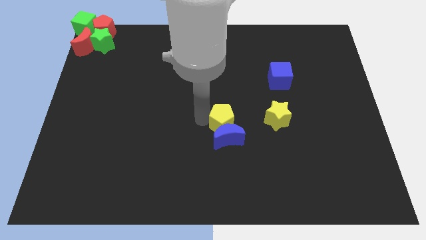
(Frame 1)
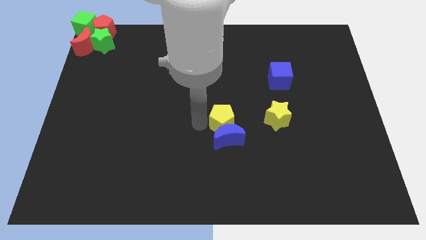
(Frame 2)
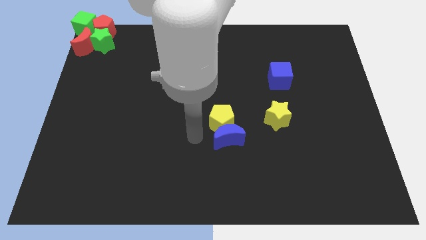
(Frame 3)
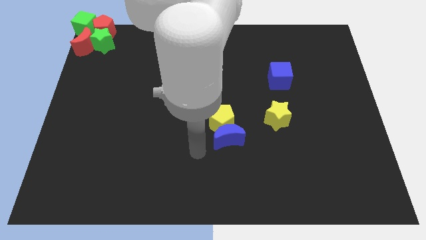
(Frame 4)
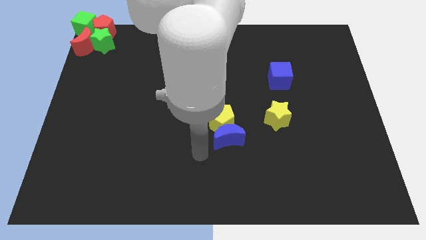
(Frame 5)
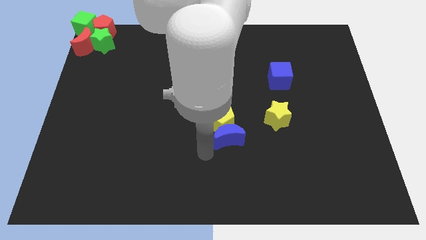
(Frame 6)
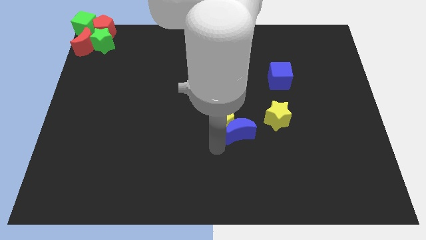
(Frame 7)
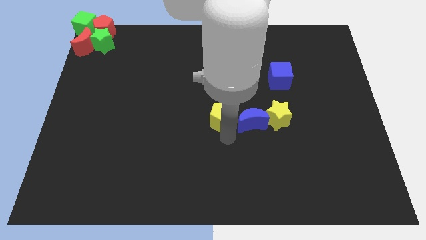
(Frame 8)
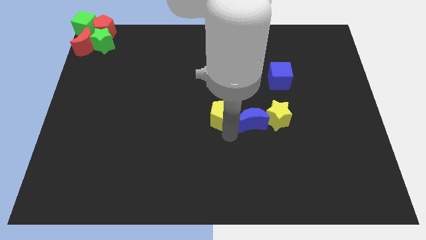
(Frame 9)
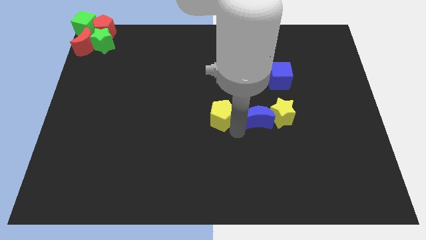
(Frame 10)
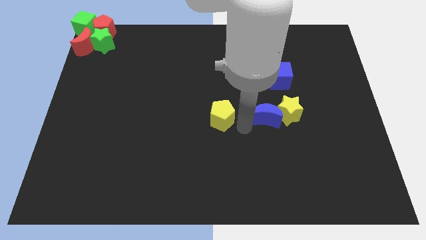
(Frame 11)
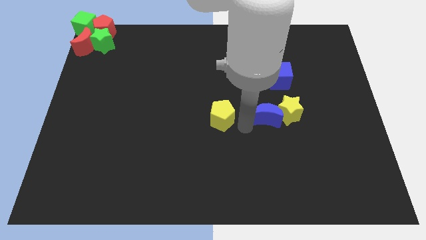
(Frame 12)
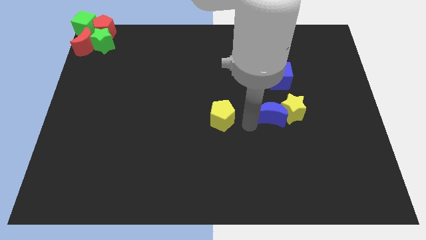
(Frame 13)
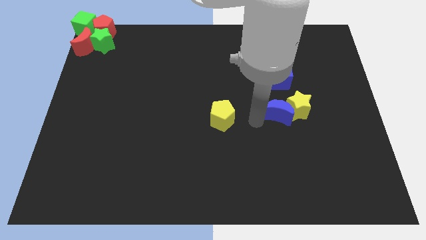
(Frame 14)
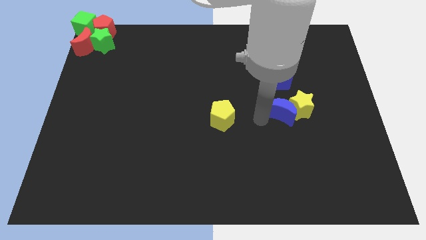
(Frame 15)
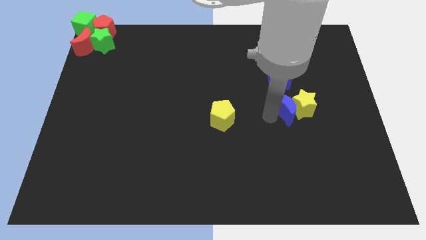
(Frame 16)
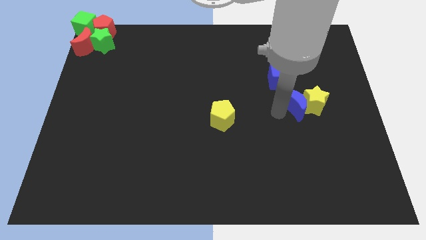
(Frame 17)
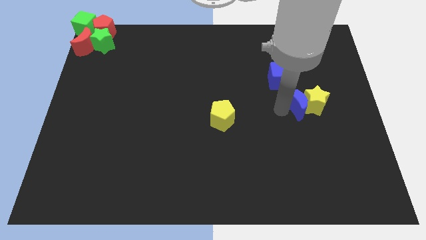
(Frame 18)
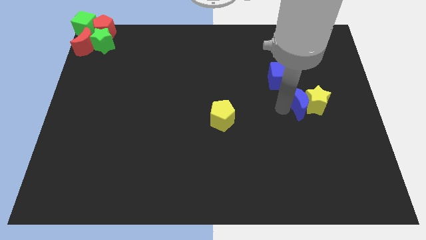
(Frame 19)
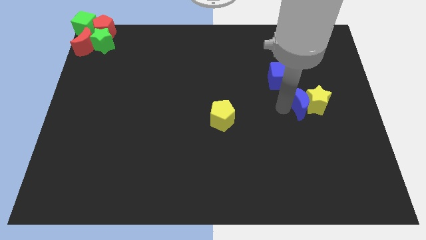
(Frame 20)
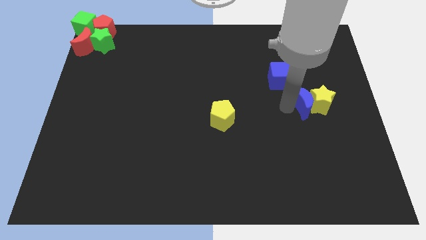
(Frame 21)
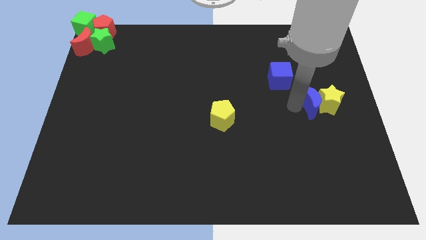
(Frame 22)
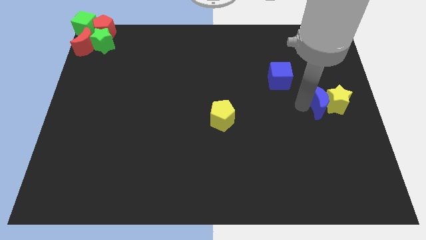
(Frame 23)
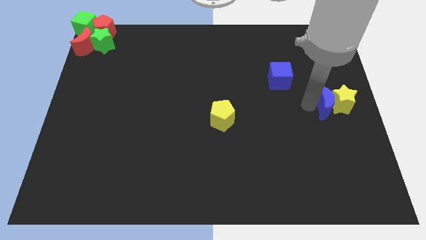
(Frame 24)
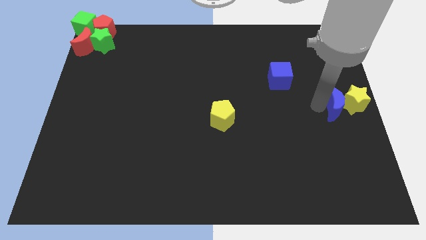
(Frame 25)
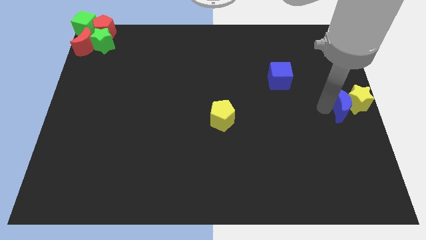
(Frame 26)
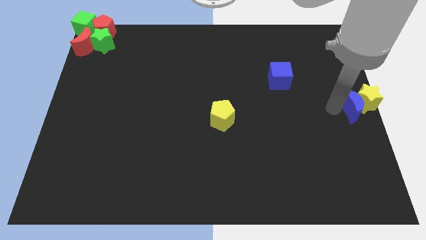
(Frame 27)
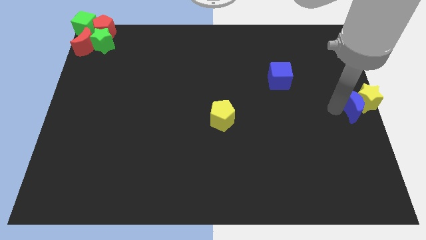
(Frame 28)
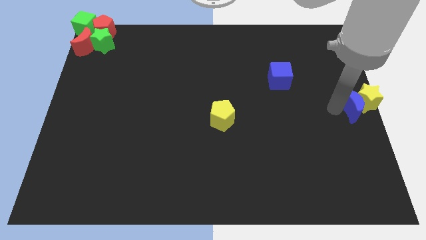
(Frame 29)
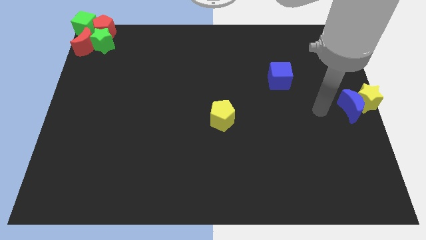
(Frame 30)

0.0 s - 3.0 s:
move the blue moon along with the yellow star to the center right of the board

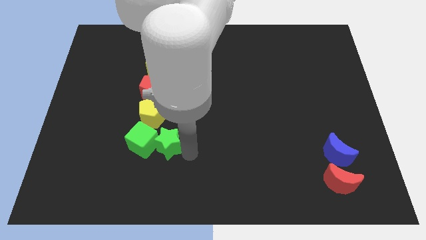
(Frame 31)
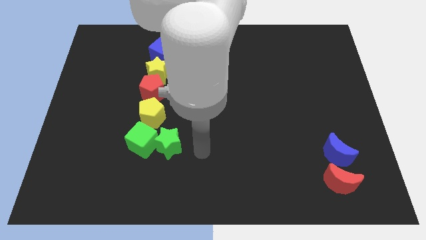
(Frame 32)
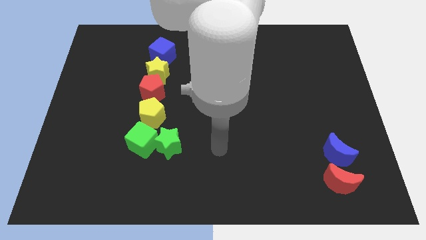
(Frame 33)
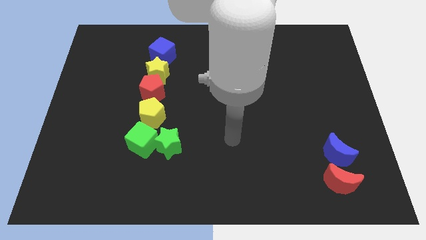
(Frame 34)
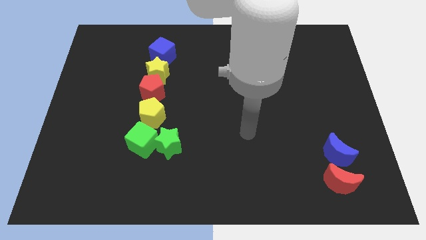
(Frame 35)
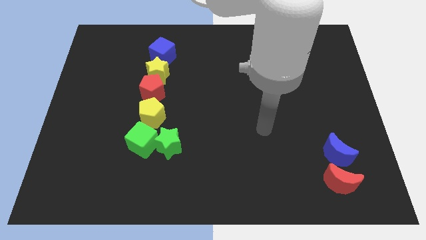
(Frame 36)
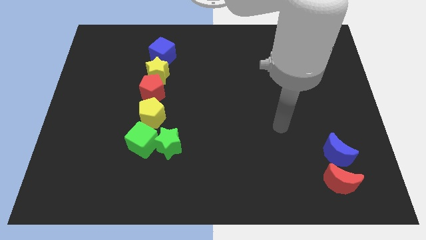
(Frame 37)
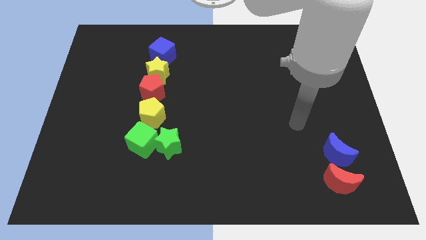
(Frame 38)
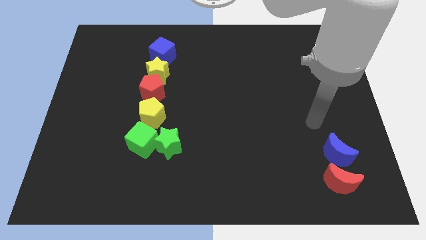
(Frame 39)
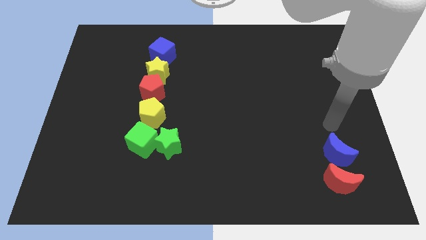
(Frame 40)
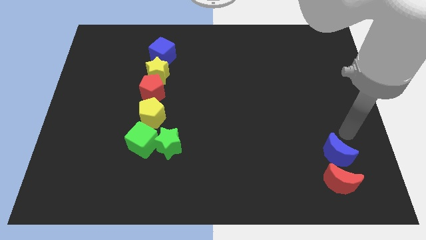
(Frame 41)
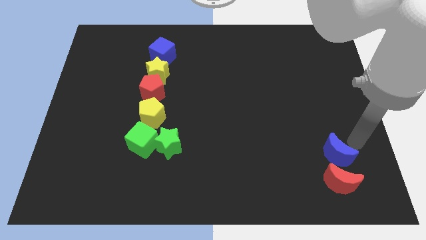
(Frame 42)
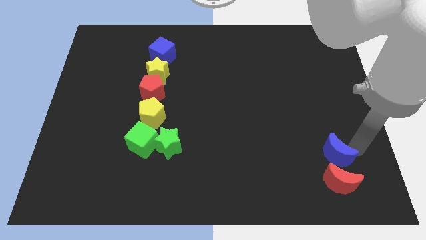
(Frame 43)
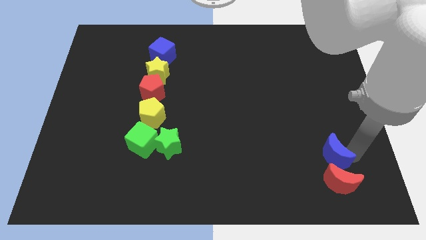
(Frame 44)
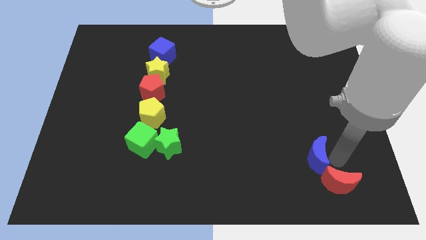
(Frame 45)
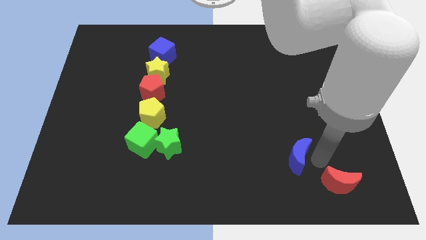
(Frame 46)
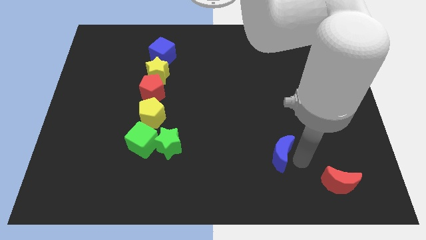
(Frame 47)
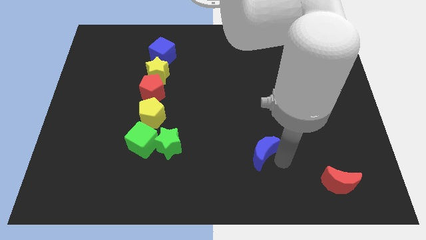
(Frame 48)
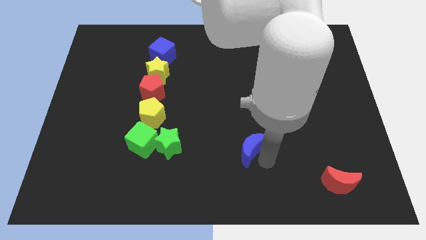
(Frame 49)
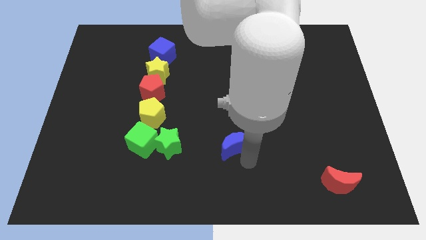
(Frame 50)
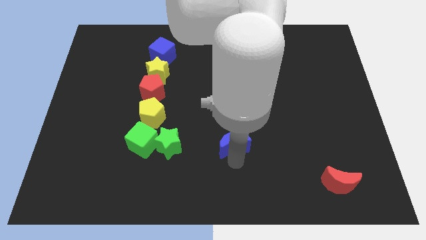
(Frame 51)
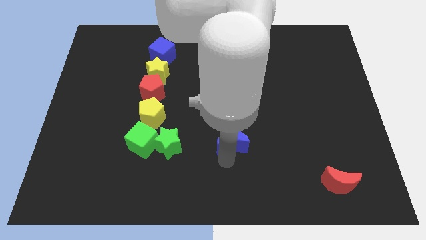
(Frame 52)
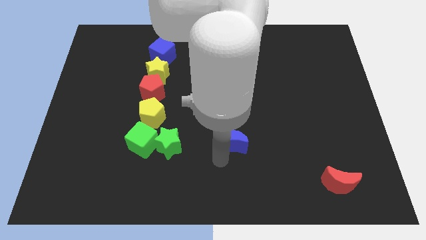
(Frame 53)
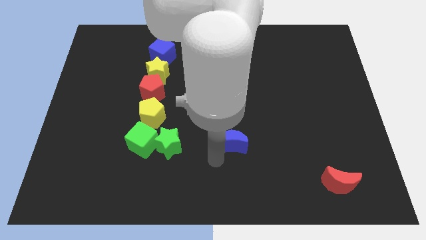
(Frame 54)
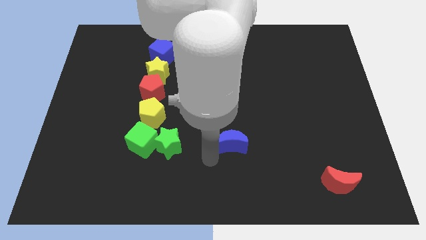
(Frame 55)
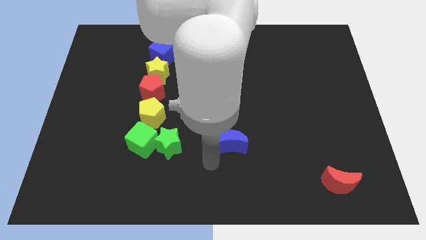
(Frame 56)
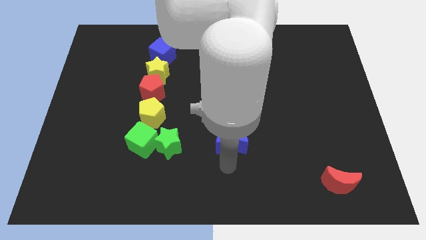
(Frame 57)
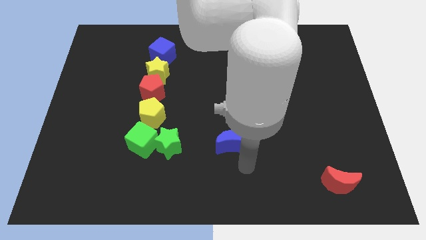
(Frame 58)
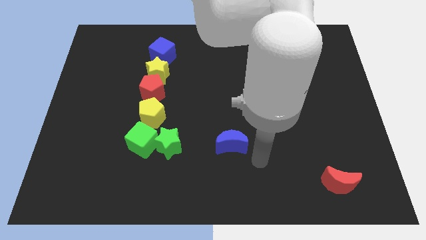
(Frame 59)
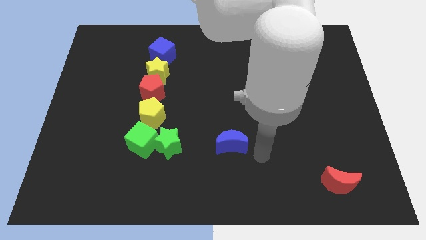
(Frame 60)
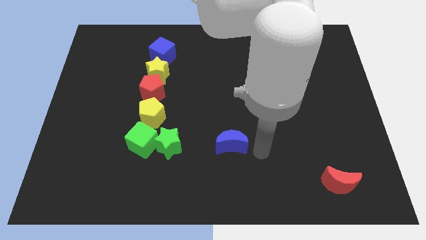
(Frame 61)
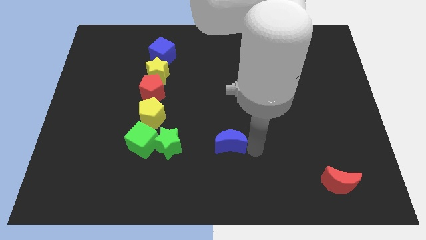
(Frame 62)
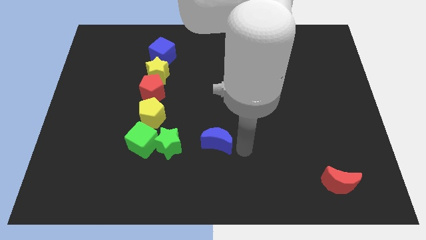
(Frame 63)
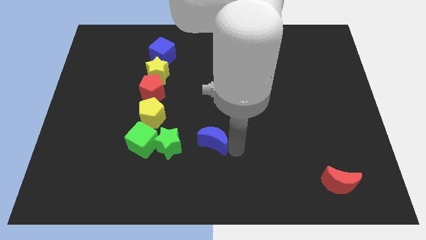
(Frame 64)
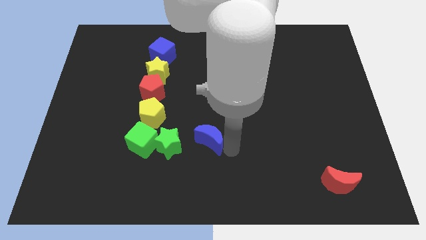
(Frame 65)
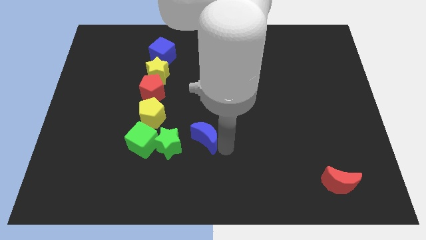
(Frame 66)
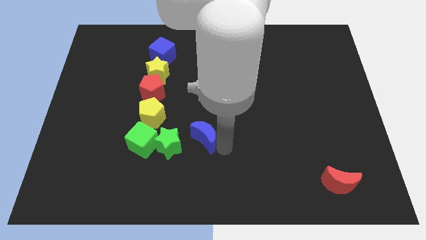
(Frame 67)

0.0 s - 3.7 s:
move the blue moon towards the right side of the green star

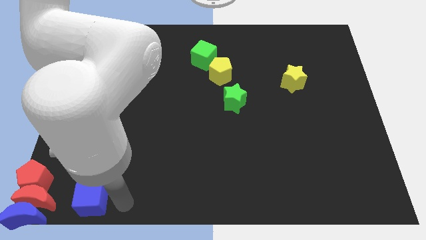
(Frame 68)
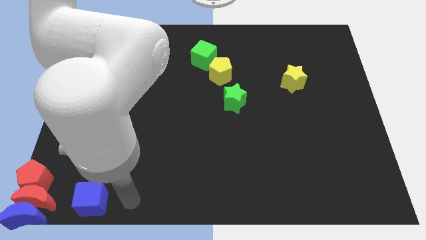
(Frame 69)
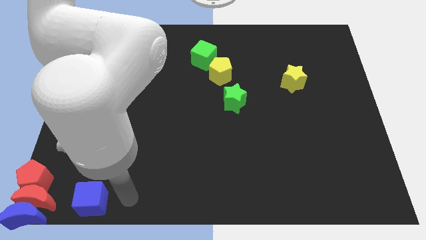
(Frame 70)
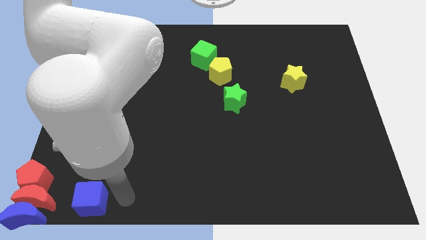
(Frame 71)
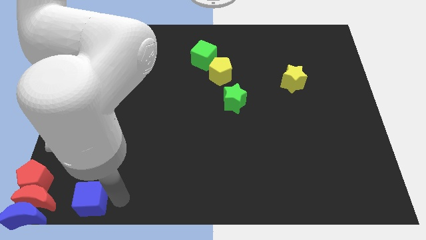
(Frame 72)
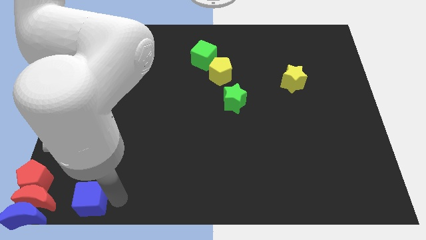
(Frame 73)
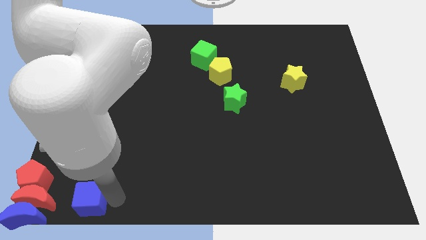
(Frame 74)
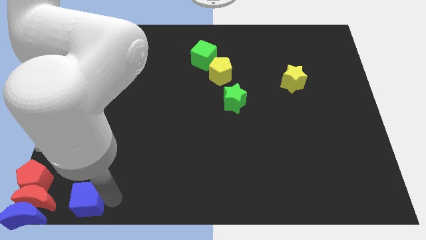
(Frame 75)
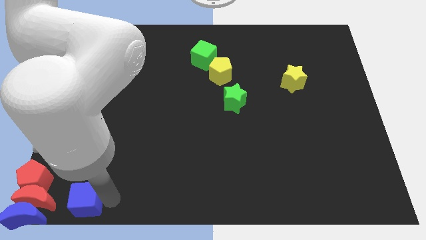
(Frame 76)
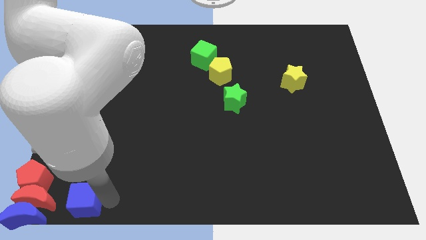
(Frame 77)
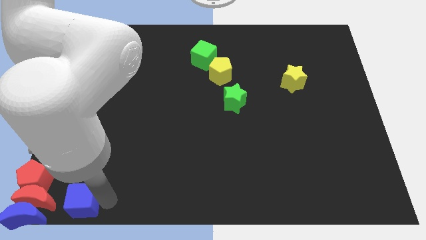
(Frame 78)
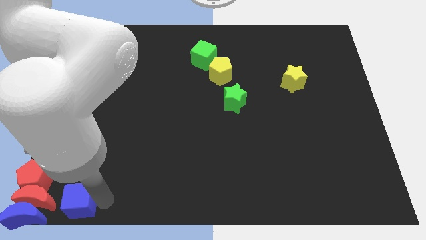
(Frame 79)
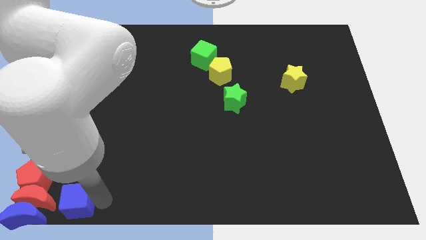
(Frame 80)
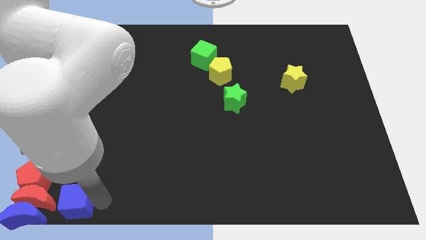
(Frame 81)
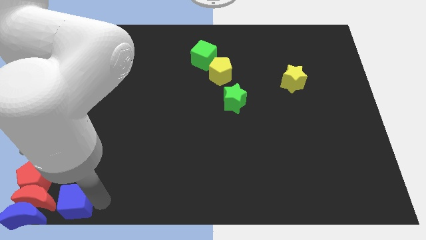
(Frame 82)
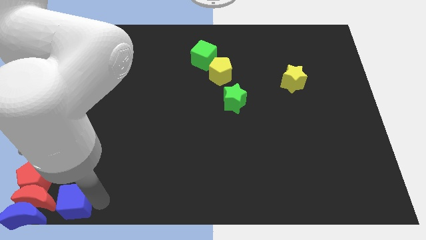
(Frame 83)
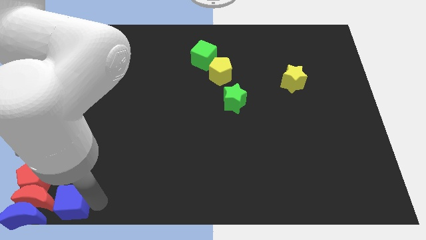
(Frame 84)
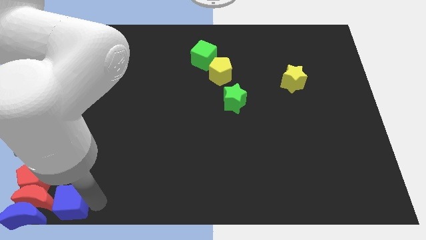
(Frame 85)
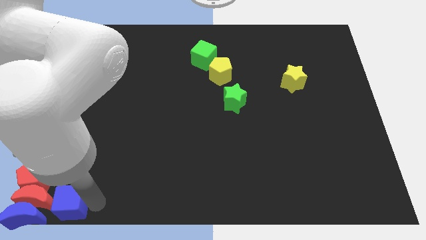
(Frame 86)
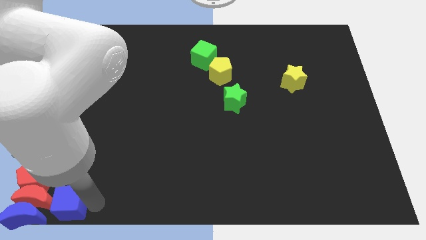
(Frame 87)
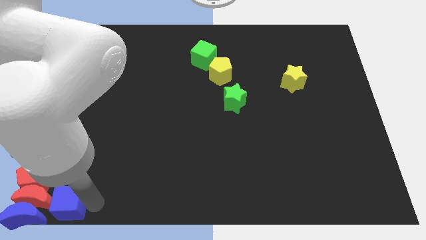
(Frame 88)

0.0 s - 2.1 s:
push the blue cube to the right of red crescent to the bottom left of the board

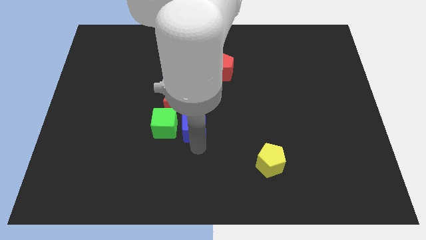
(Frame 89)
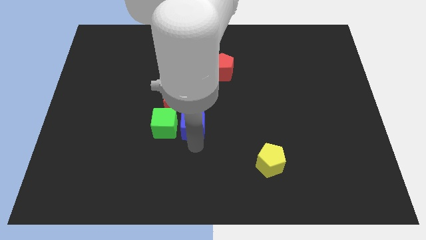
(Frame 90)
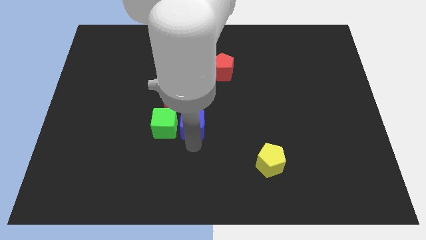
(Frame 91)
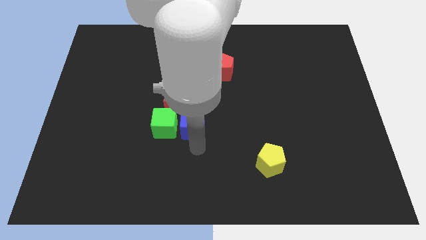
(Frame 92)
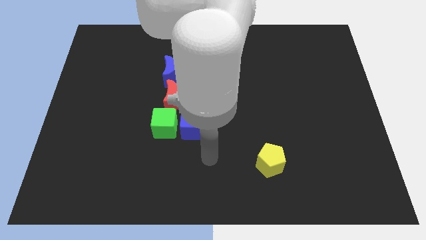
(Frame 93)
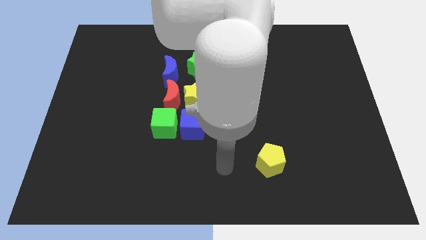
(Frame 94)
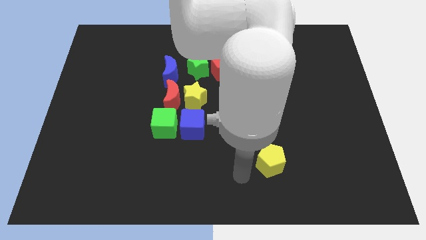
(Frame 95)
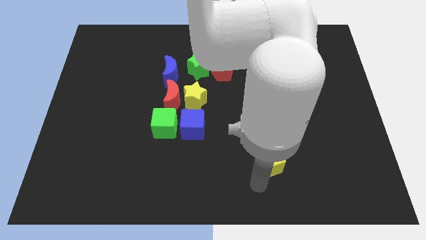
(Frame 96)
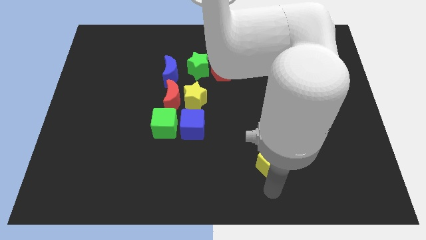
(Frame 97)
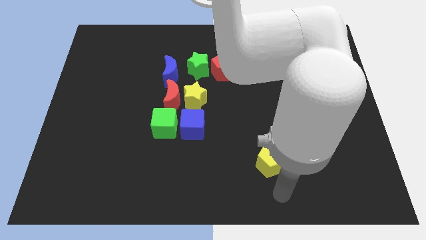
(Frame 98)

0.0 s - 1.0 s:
move the arm away from the blue cube
